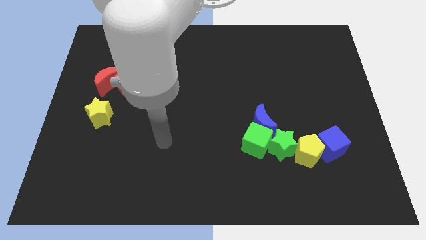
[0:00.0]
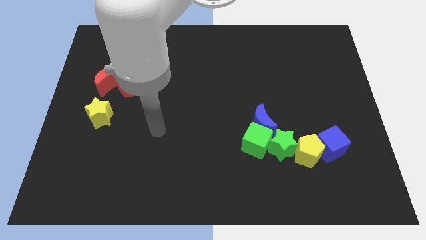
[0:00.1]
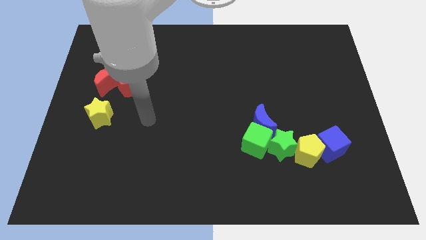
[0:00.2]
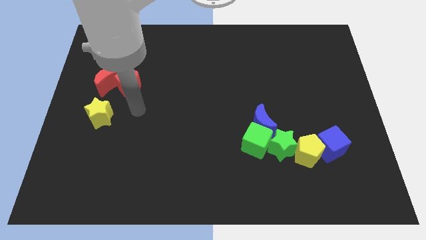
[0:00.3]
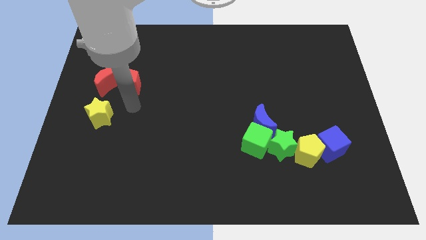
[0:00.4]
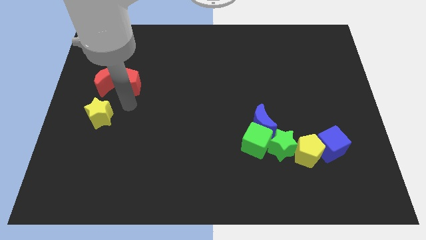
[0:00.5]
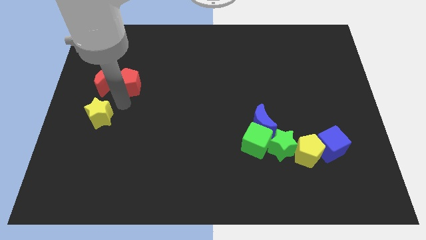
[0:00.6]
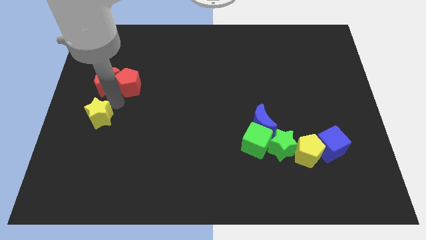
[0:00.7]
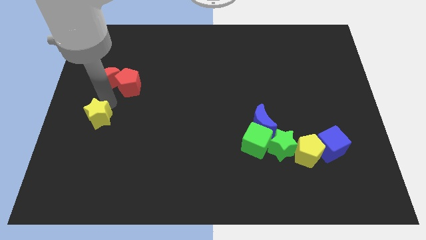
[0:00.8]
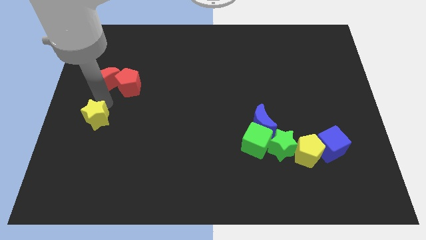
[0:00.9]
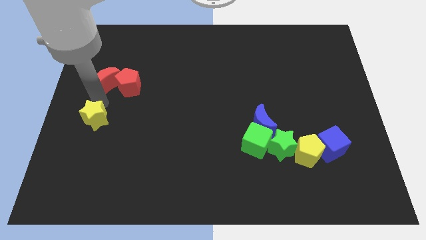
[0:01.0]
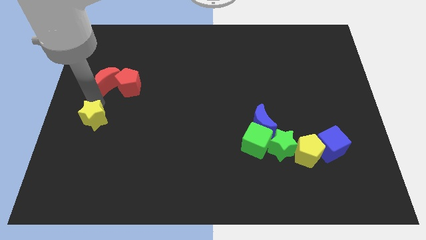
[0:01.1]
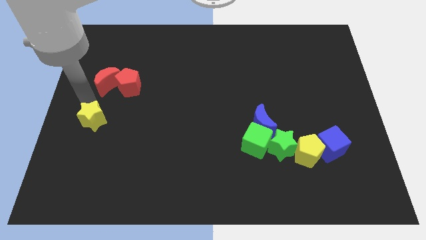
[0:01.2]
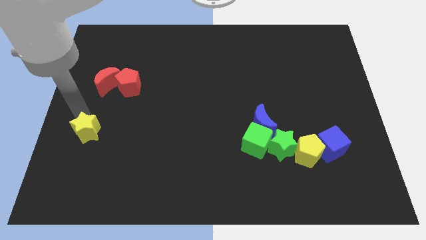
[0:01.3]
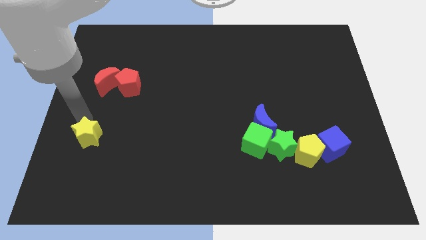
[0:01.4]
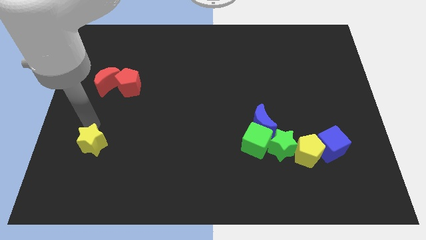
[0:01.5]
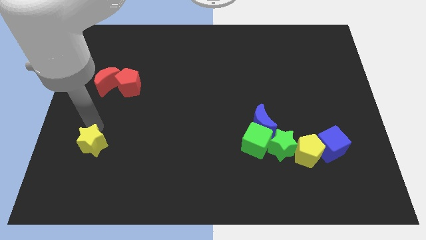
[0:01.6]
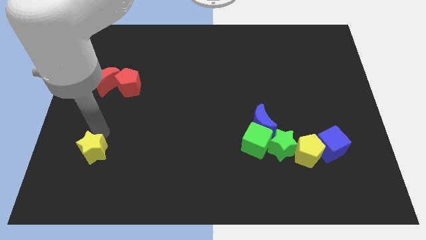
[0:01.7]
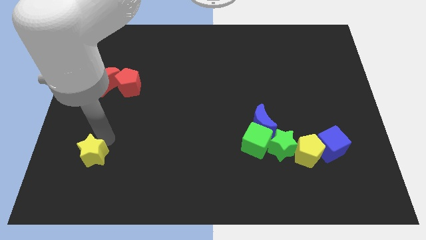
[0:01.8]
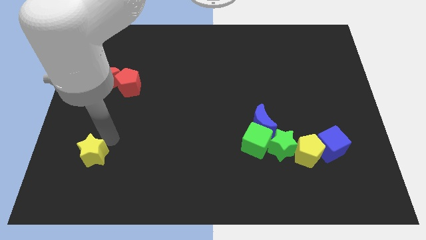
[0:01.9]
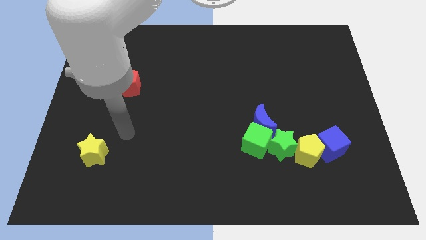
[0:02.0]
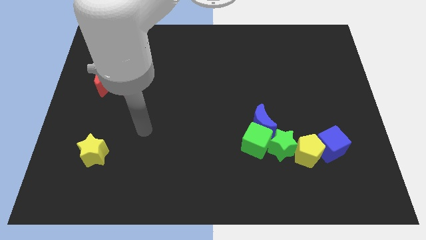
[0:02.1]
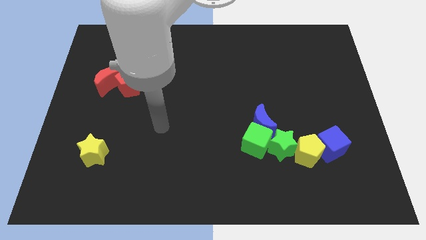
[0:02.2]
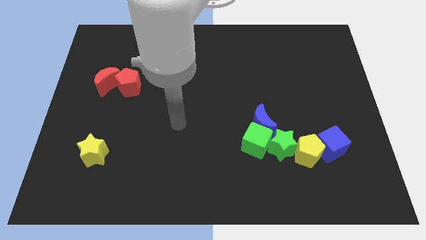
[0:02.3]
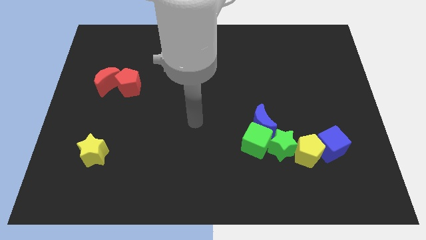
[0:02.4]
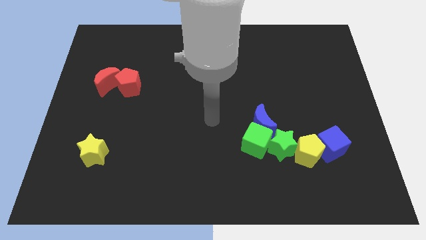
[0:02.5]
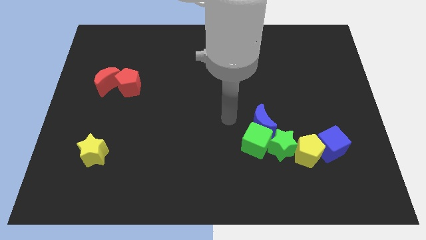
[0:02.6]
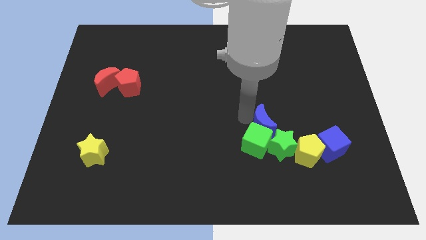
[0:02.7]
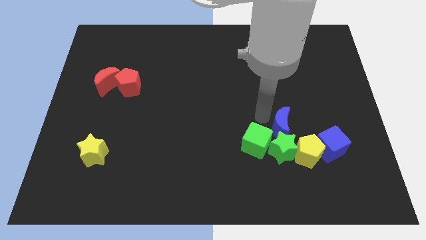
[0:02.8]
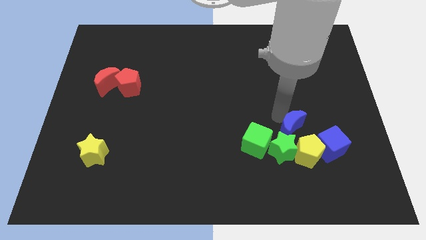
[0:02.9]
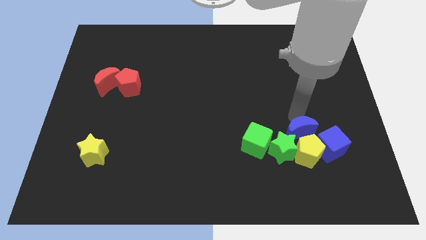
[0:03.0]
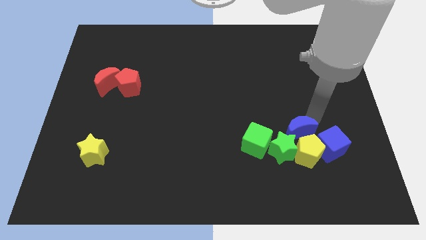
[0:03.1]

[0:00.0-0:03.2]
move the yellow star to bottom left

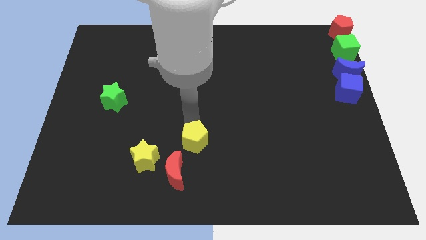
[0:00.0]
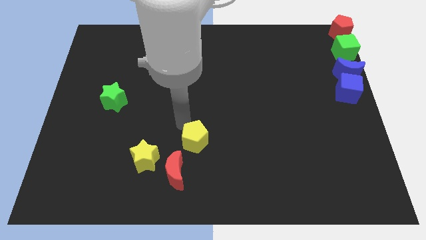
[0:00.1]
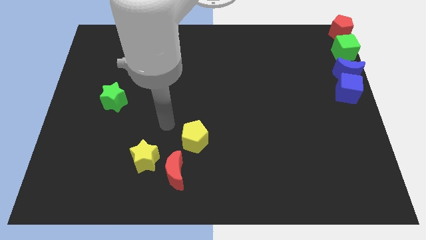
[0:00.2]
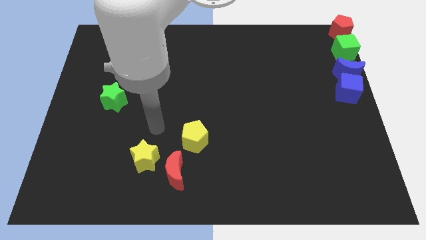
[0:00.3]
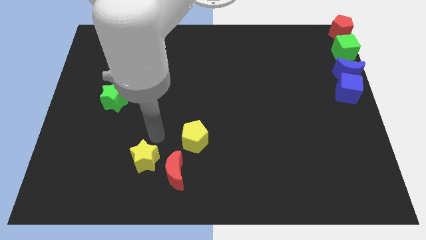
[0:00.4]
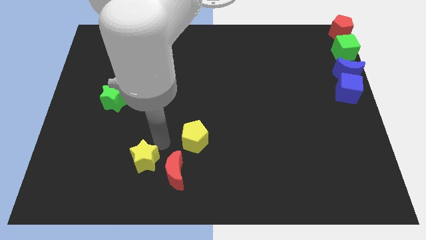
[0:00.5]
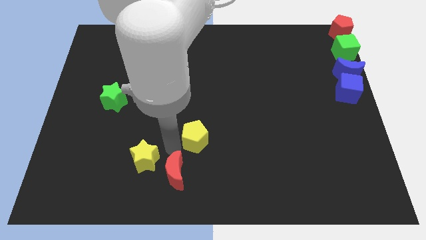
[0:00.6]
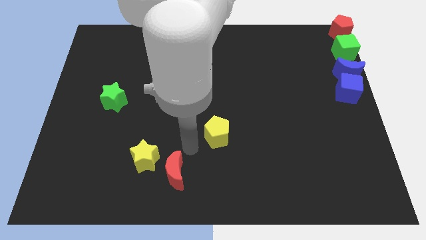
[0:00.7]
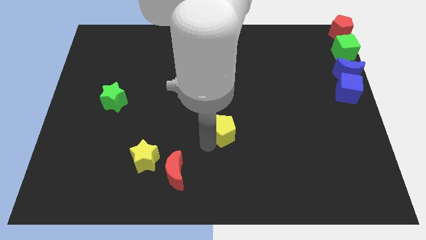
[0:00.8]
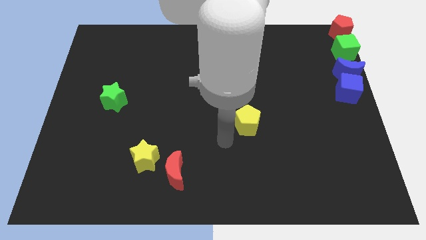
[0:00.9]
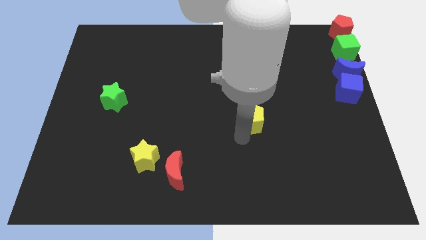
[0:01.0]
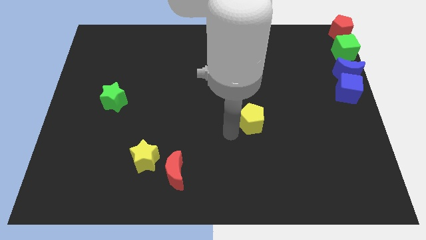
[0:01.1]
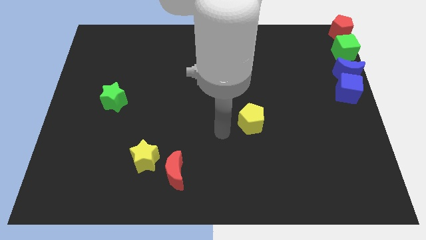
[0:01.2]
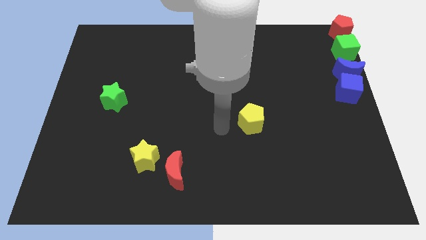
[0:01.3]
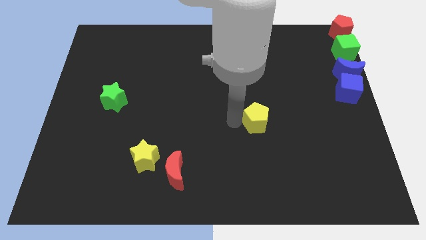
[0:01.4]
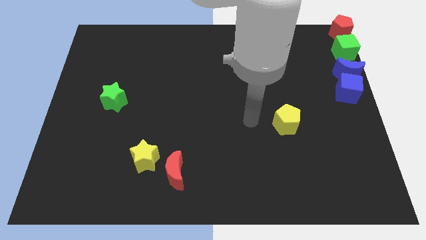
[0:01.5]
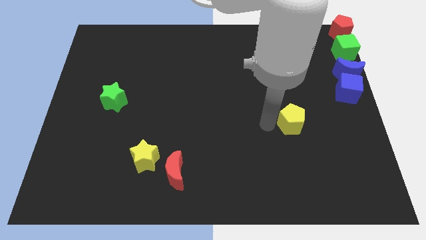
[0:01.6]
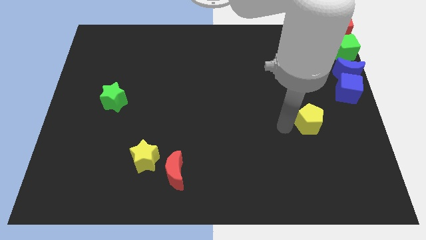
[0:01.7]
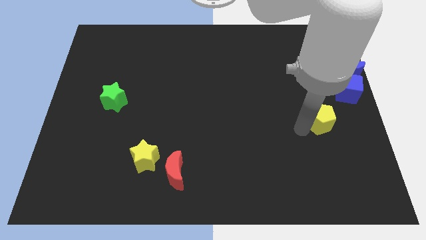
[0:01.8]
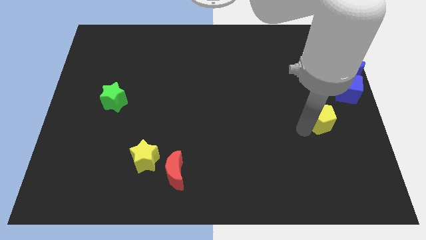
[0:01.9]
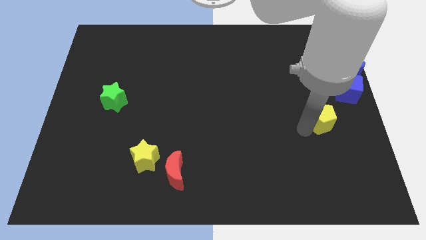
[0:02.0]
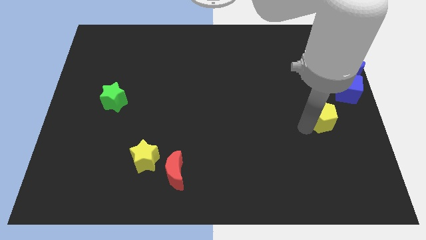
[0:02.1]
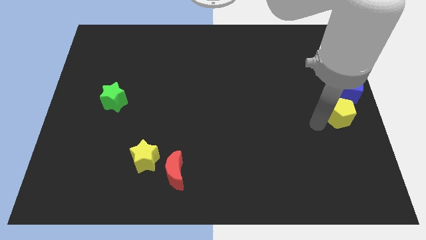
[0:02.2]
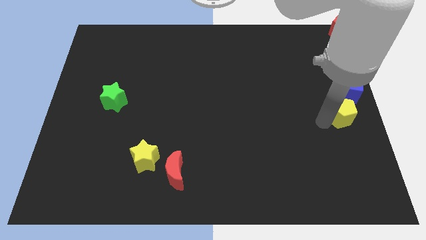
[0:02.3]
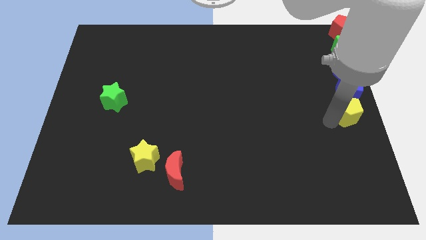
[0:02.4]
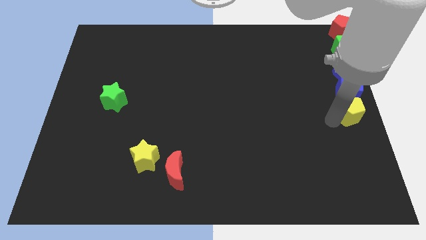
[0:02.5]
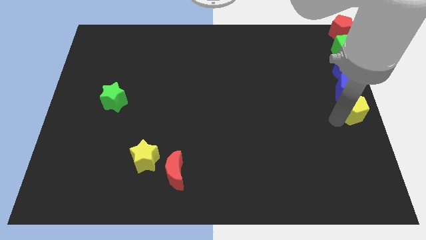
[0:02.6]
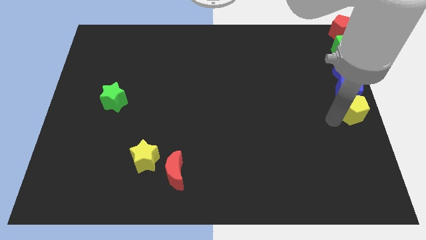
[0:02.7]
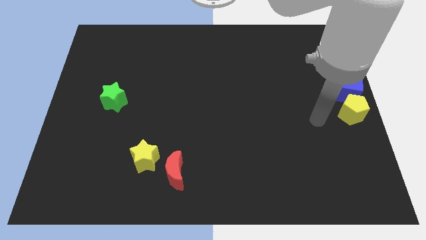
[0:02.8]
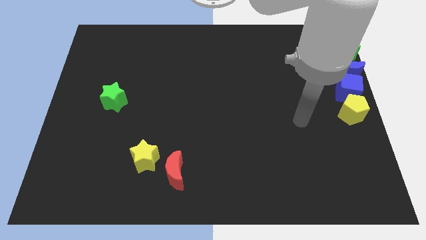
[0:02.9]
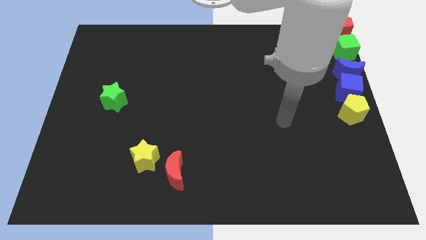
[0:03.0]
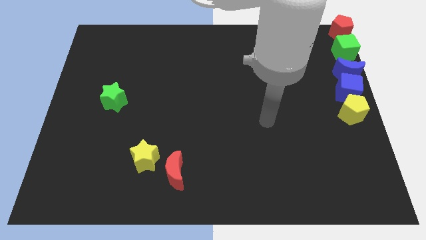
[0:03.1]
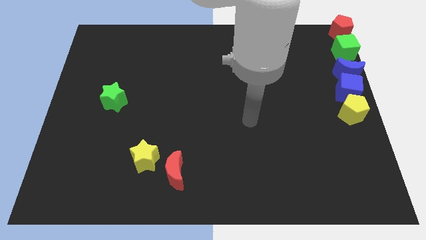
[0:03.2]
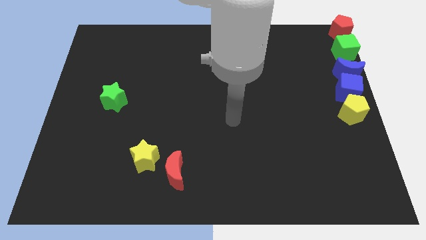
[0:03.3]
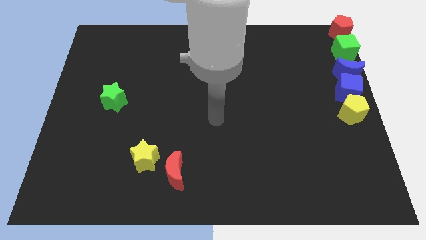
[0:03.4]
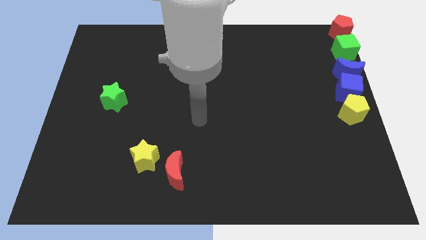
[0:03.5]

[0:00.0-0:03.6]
push the yellow pentagon into the blue cube

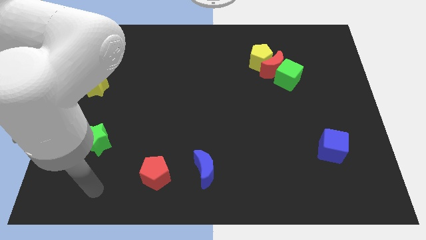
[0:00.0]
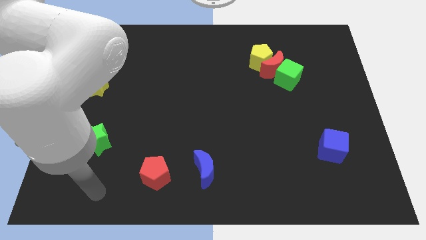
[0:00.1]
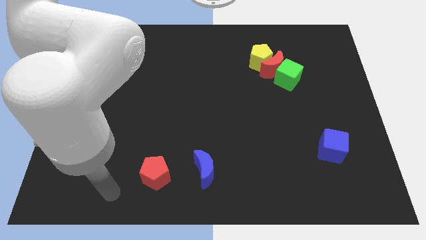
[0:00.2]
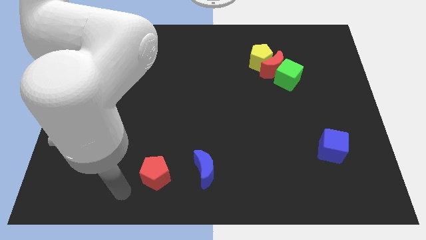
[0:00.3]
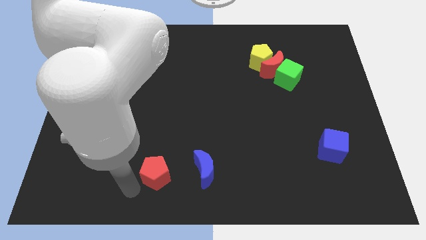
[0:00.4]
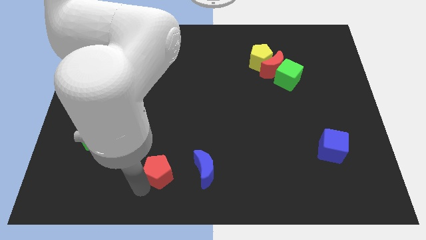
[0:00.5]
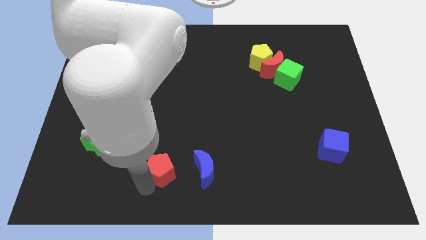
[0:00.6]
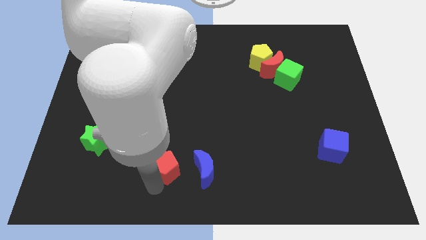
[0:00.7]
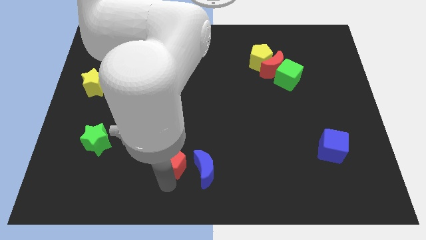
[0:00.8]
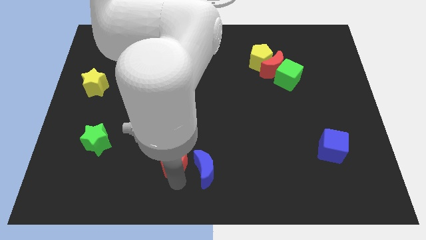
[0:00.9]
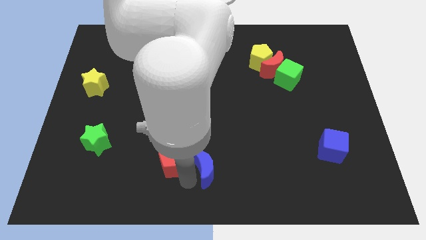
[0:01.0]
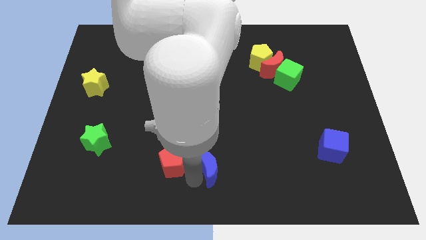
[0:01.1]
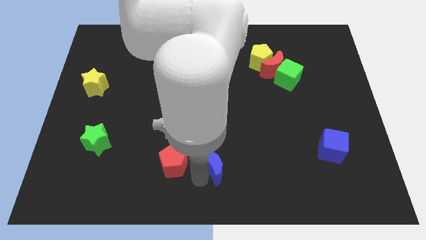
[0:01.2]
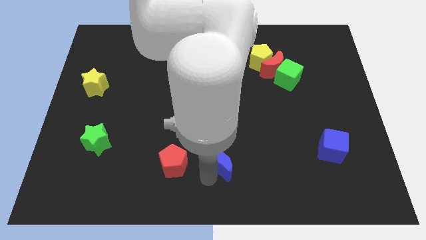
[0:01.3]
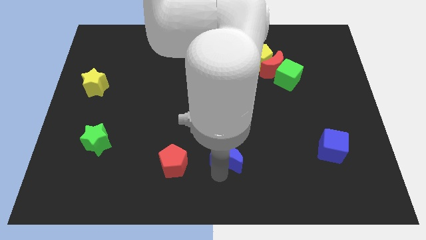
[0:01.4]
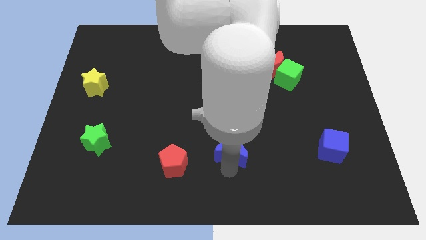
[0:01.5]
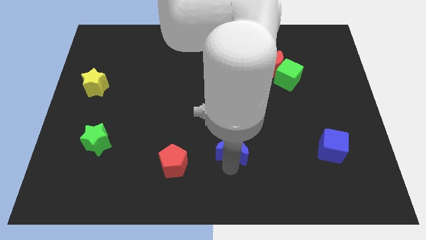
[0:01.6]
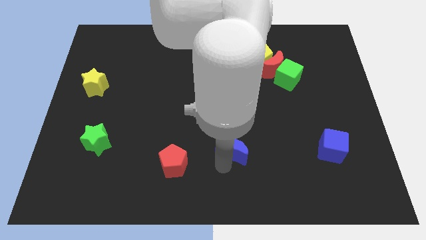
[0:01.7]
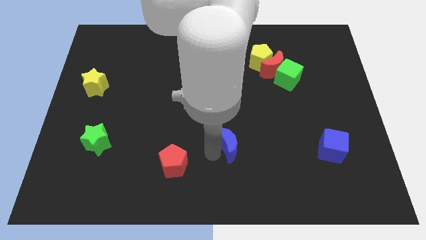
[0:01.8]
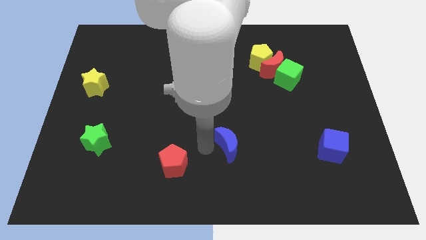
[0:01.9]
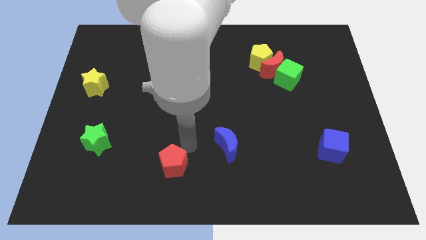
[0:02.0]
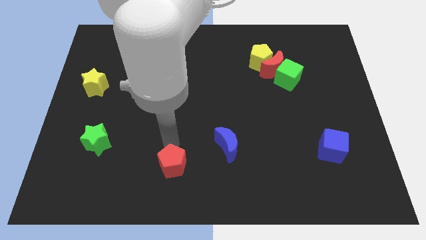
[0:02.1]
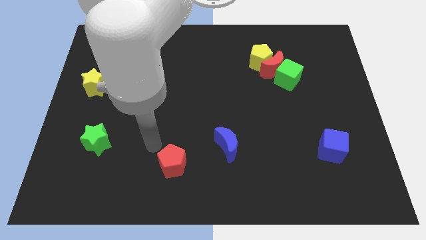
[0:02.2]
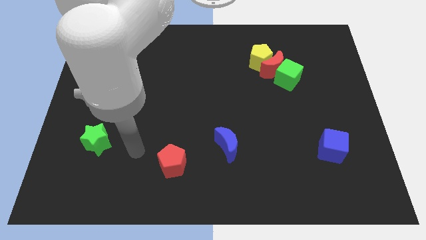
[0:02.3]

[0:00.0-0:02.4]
push the red pentagon and blue diagonal to each other
